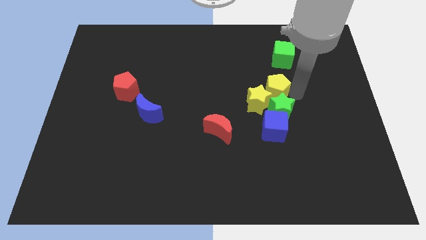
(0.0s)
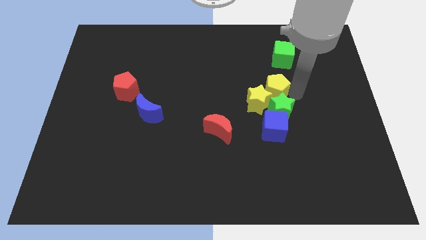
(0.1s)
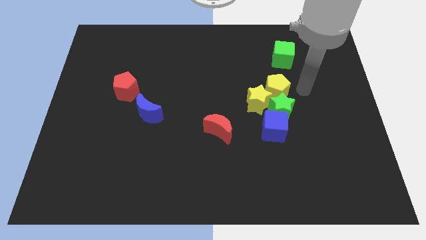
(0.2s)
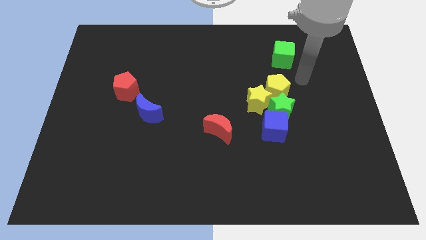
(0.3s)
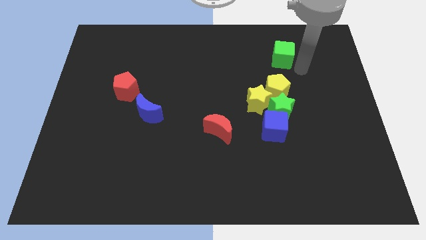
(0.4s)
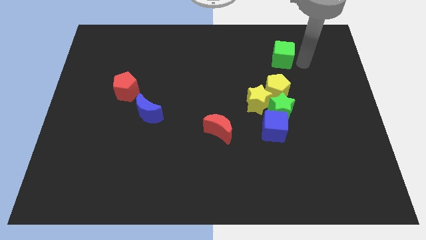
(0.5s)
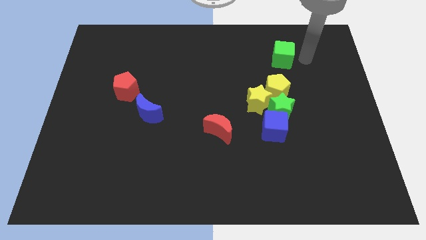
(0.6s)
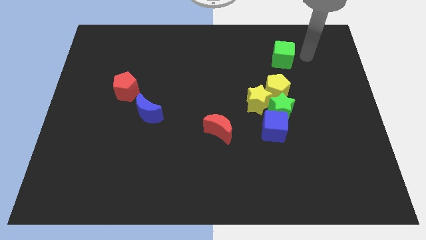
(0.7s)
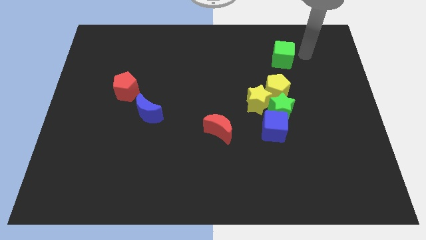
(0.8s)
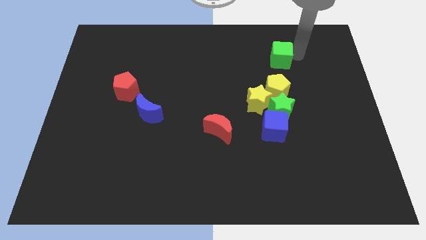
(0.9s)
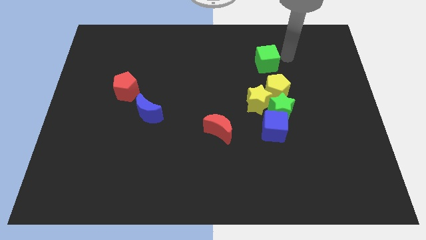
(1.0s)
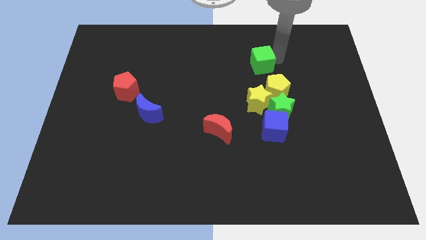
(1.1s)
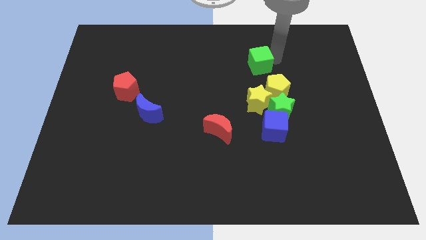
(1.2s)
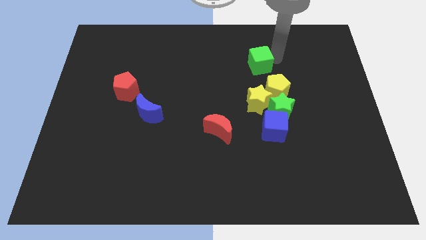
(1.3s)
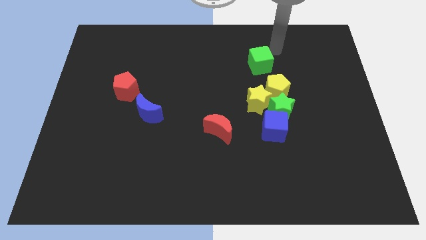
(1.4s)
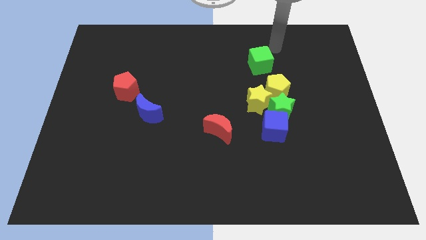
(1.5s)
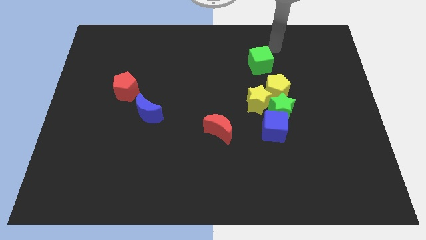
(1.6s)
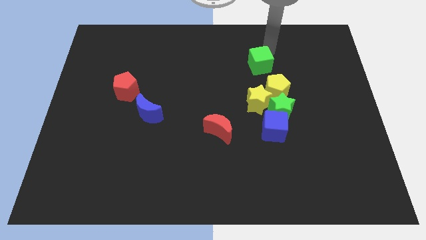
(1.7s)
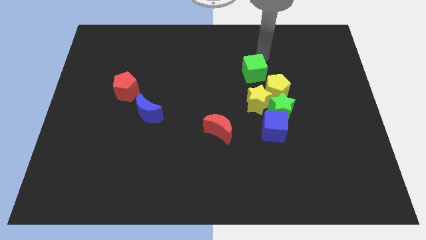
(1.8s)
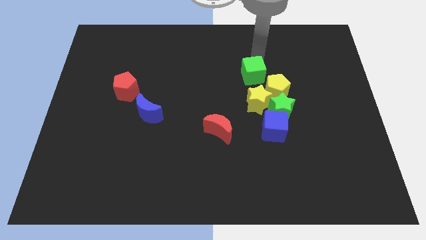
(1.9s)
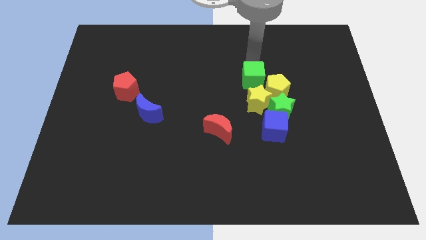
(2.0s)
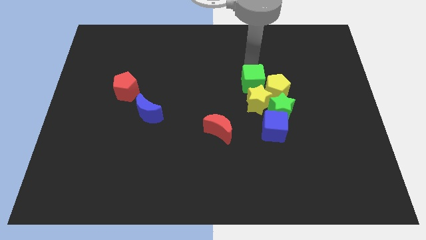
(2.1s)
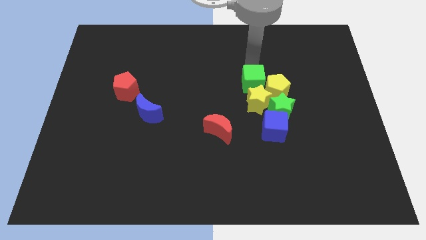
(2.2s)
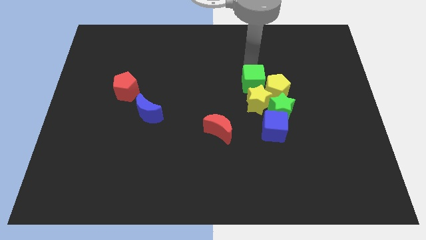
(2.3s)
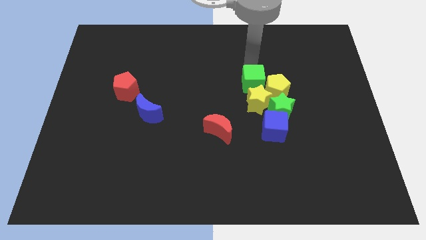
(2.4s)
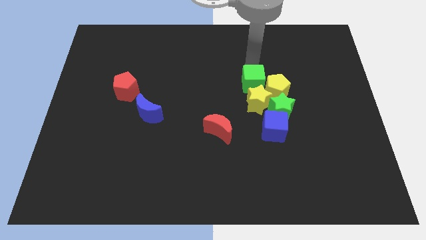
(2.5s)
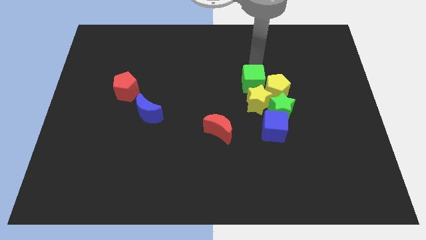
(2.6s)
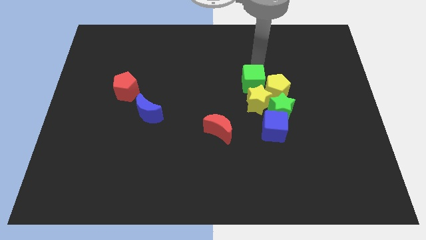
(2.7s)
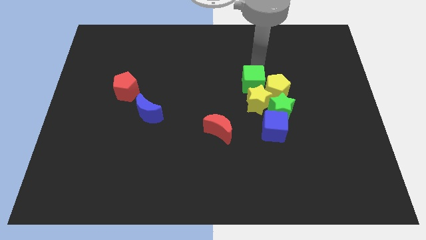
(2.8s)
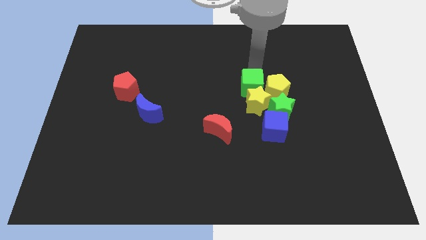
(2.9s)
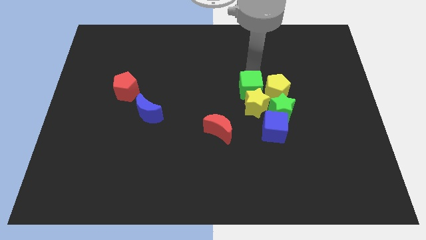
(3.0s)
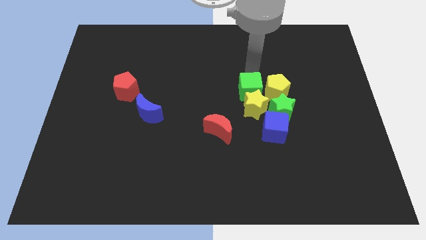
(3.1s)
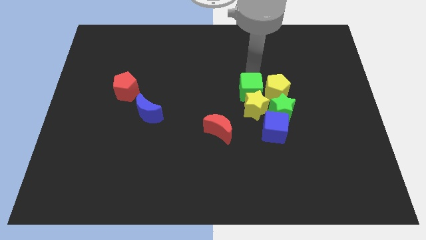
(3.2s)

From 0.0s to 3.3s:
place the green cube on top of yellow star

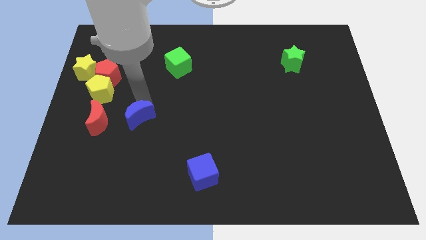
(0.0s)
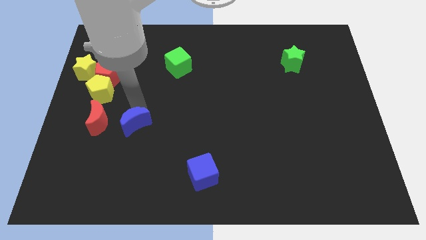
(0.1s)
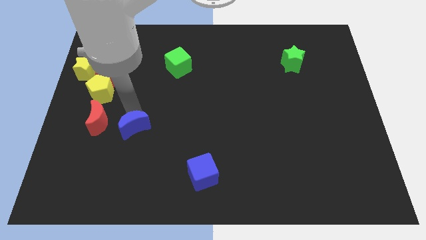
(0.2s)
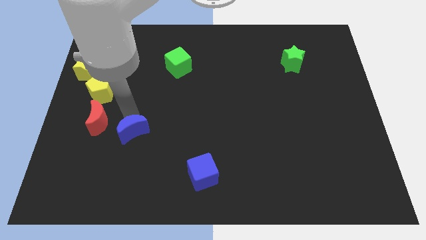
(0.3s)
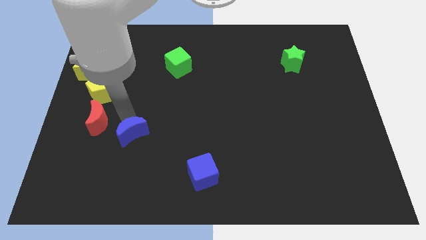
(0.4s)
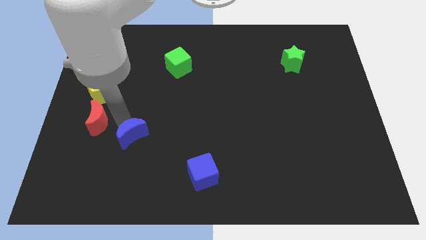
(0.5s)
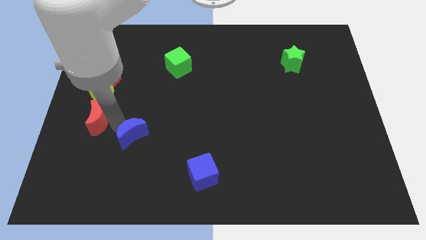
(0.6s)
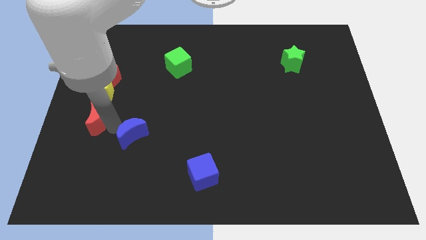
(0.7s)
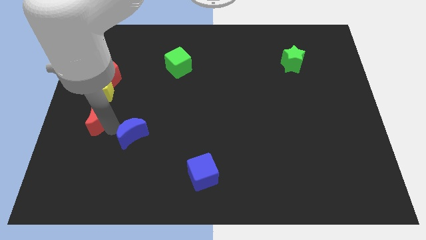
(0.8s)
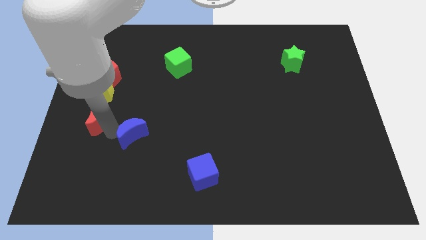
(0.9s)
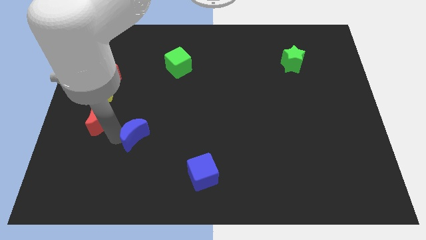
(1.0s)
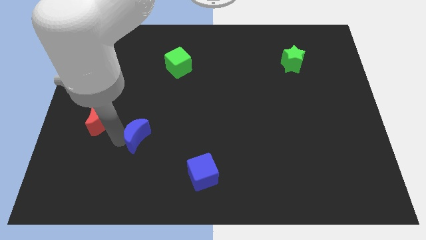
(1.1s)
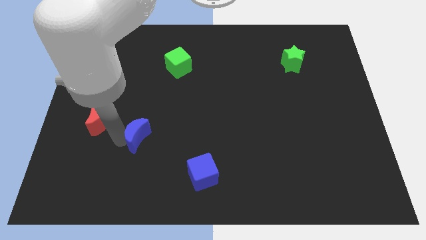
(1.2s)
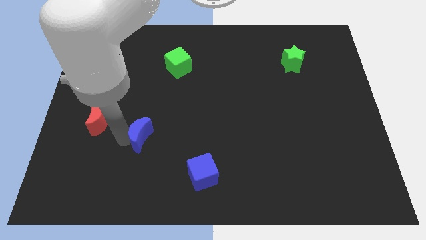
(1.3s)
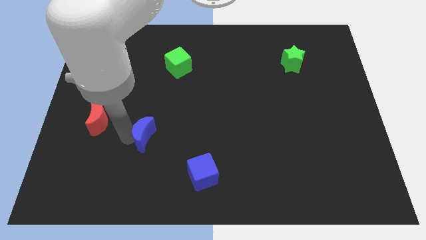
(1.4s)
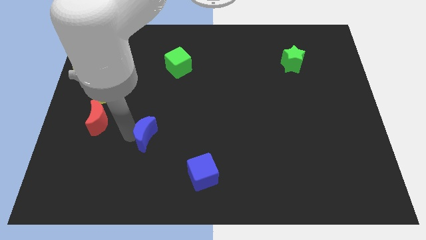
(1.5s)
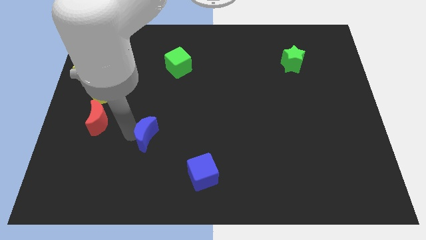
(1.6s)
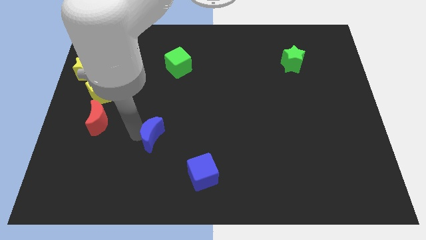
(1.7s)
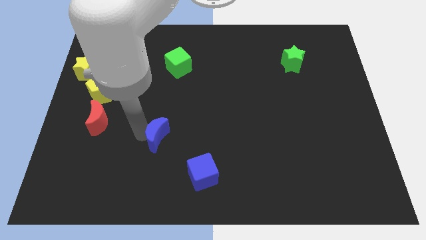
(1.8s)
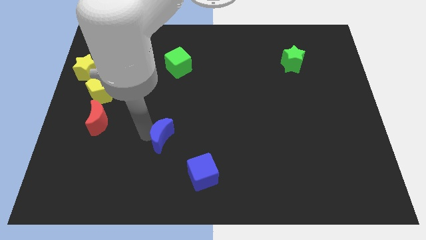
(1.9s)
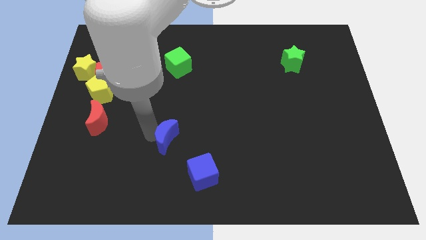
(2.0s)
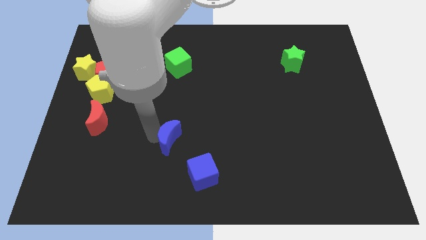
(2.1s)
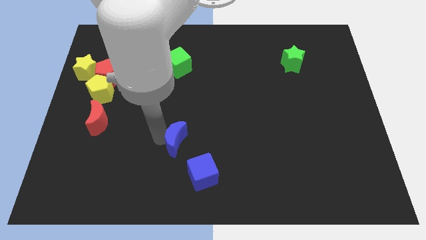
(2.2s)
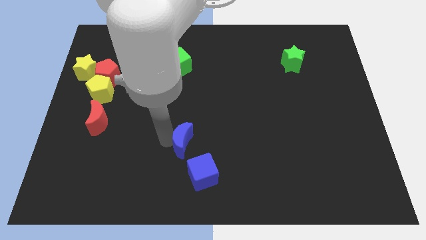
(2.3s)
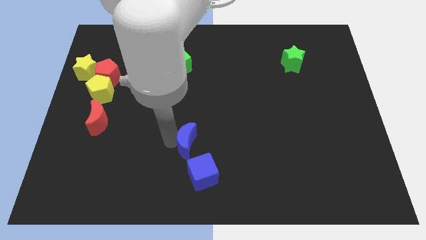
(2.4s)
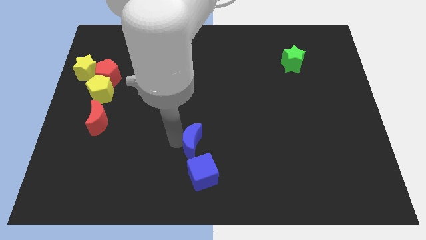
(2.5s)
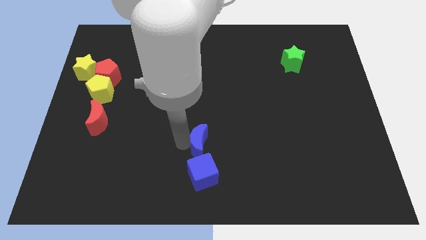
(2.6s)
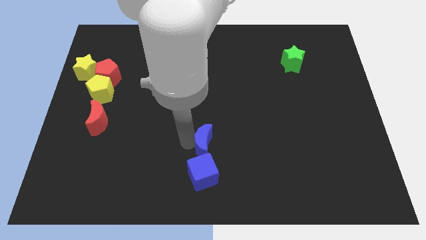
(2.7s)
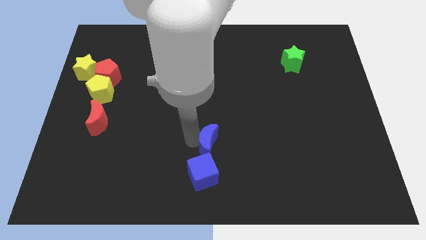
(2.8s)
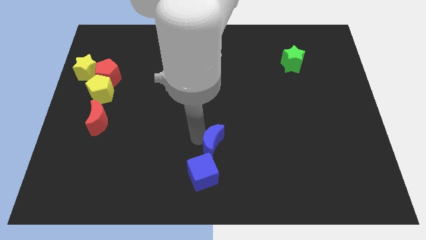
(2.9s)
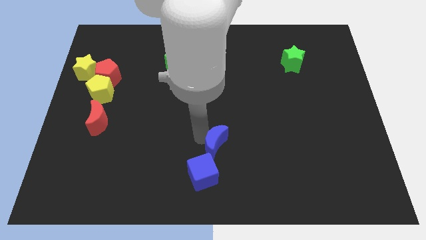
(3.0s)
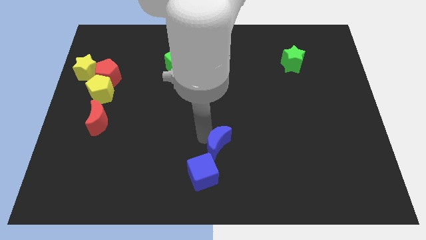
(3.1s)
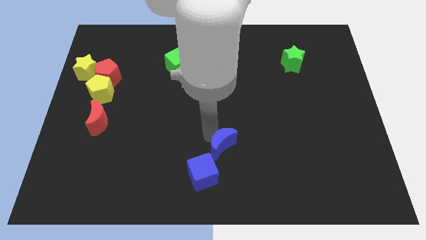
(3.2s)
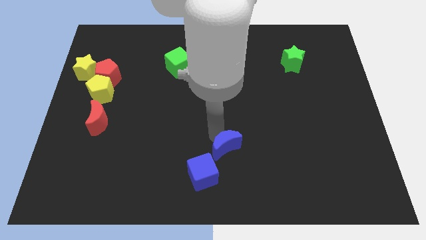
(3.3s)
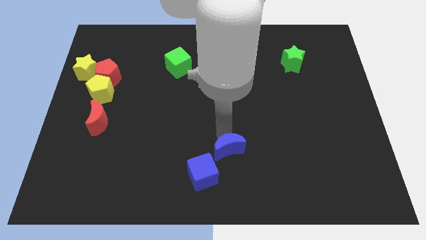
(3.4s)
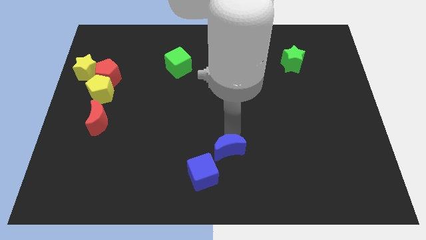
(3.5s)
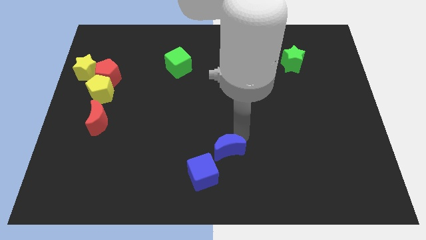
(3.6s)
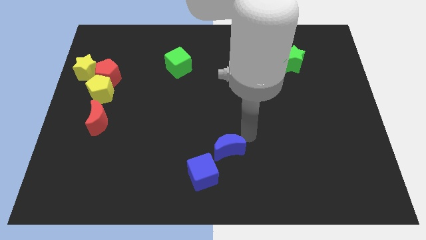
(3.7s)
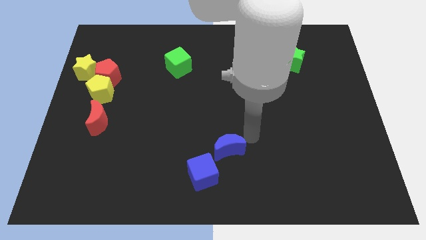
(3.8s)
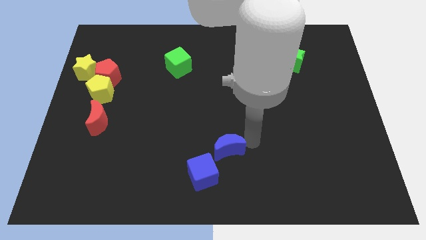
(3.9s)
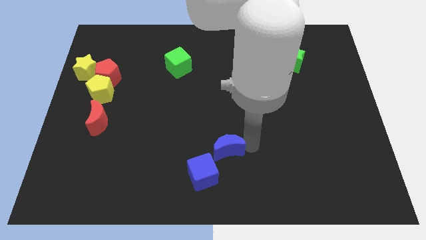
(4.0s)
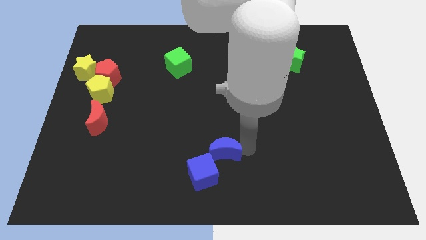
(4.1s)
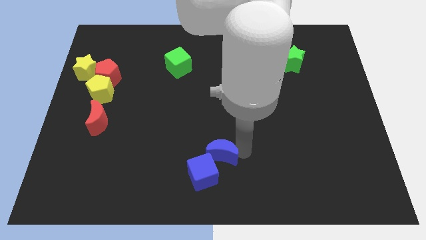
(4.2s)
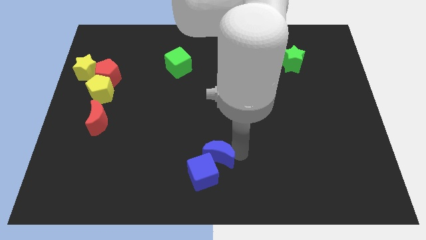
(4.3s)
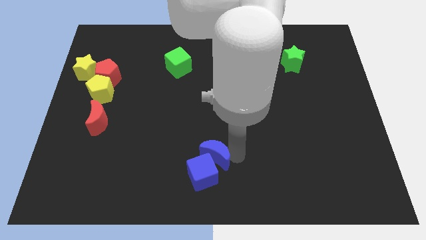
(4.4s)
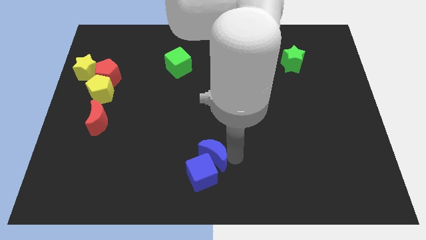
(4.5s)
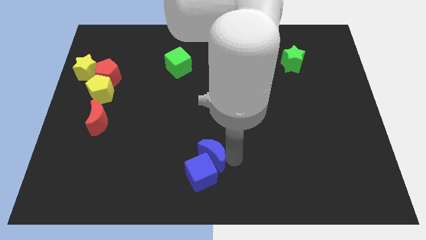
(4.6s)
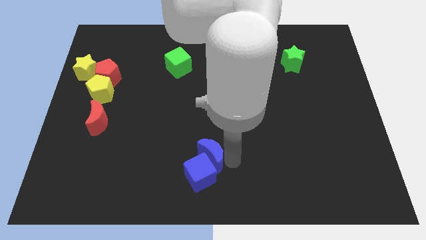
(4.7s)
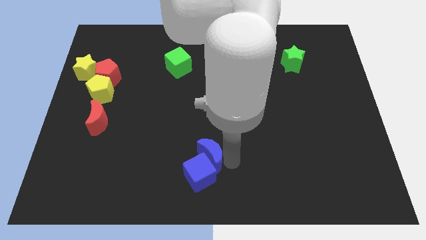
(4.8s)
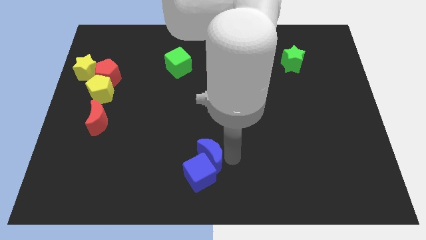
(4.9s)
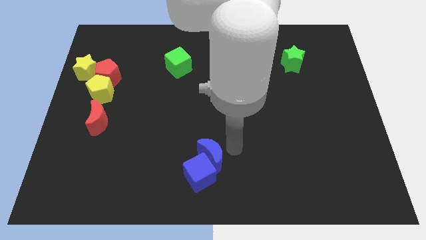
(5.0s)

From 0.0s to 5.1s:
push blue moon into blue cube

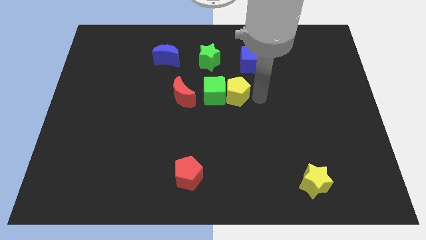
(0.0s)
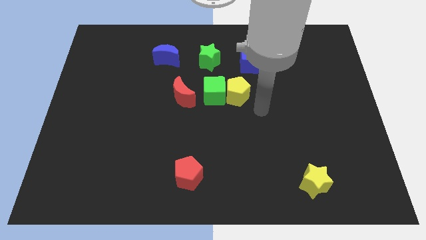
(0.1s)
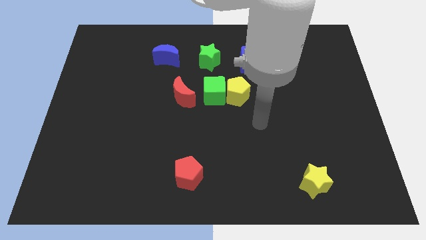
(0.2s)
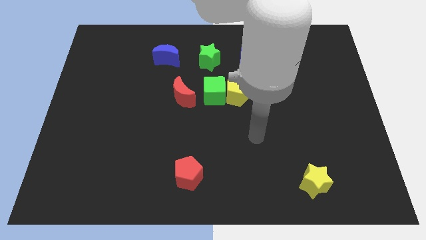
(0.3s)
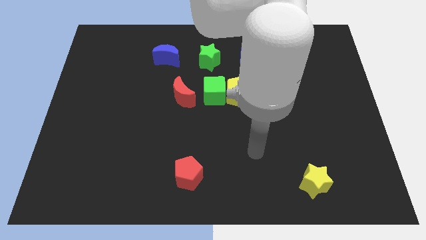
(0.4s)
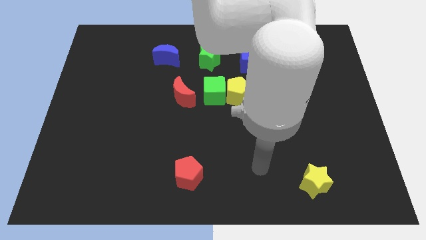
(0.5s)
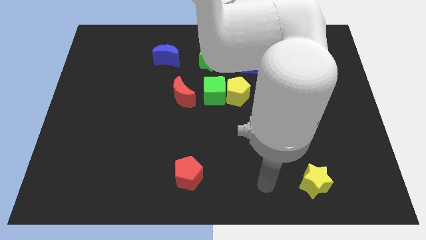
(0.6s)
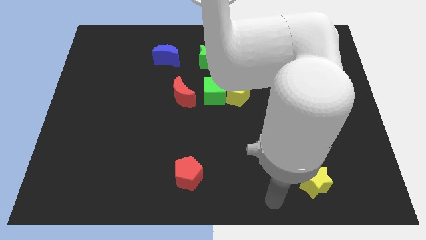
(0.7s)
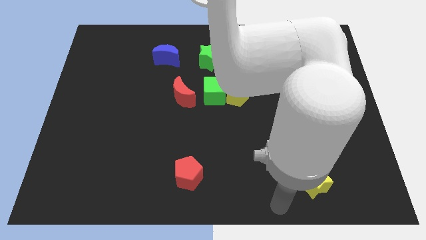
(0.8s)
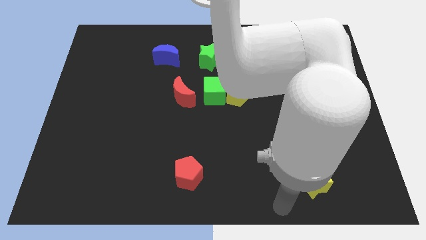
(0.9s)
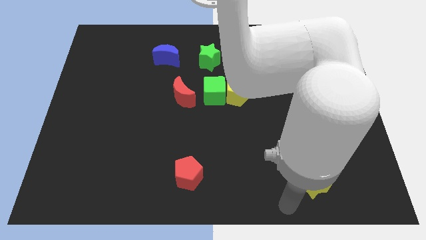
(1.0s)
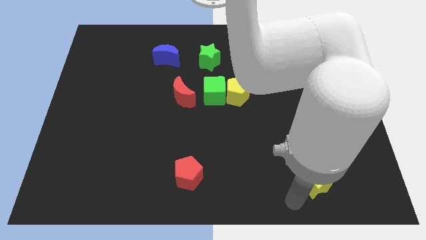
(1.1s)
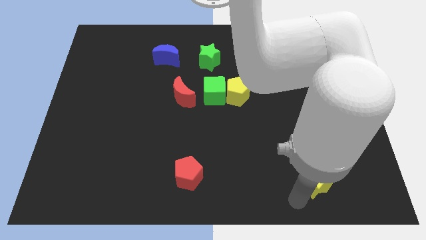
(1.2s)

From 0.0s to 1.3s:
move the arm away from the yellow pentagon
